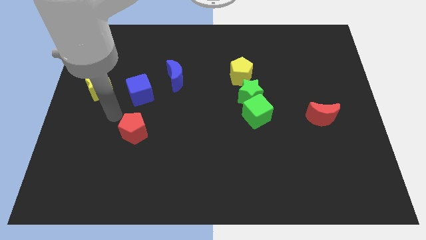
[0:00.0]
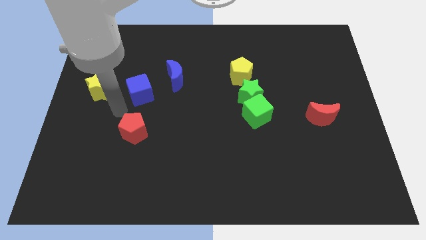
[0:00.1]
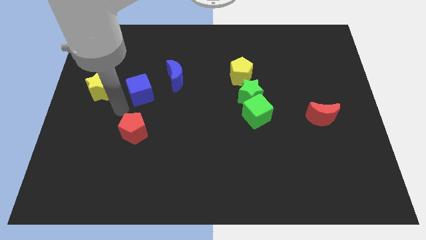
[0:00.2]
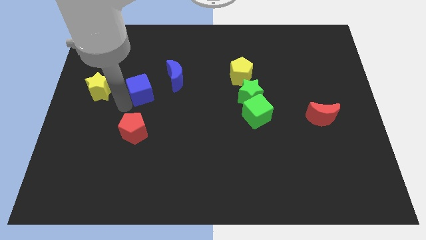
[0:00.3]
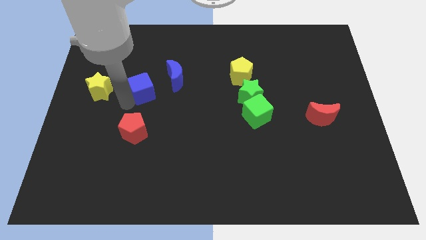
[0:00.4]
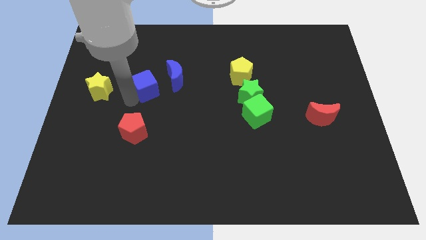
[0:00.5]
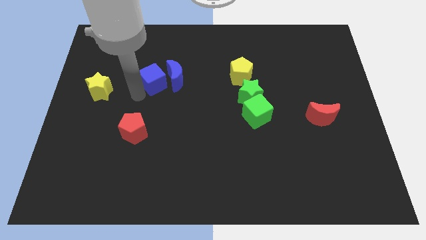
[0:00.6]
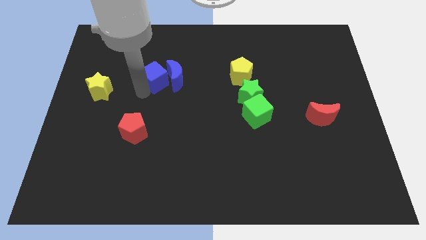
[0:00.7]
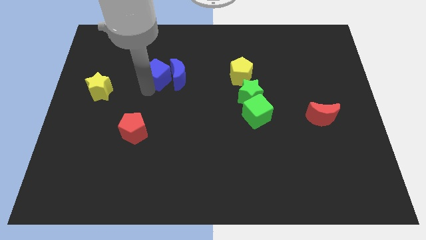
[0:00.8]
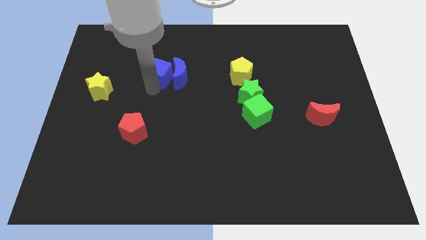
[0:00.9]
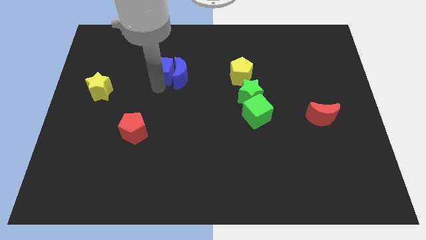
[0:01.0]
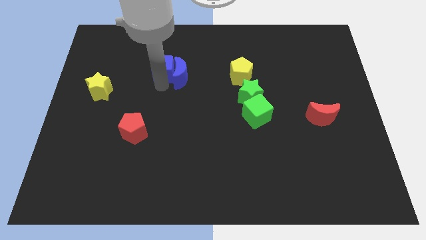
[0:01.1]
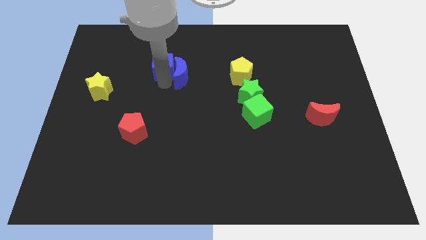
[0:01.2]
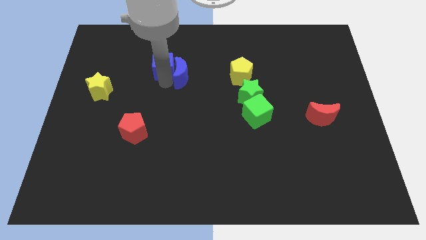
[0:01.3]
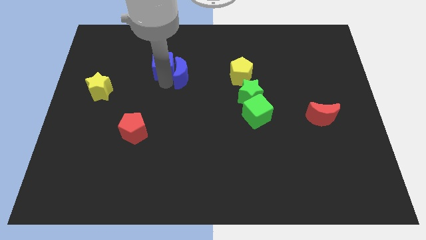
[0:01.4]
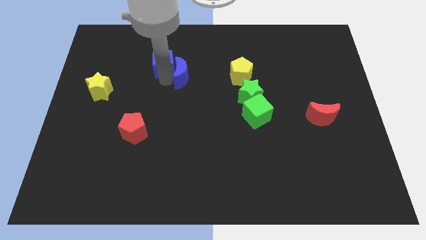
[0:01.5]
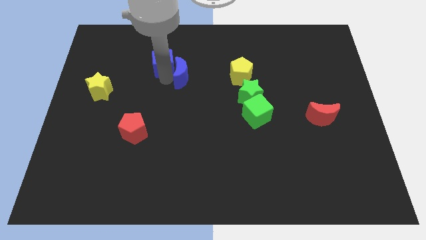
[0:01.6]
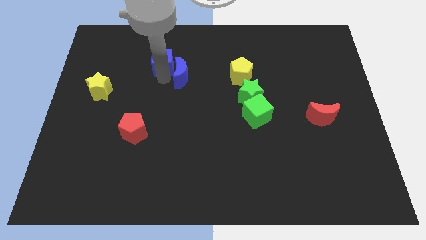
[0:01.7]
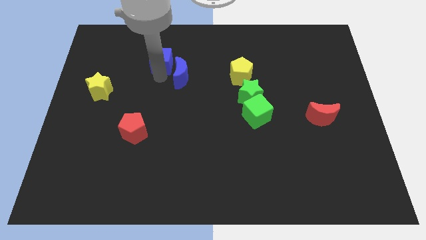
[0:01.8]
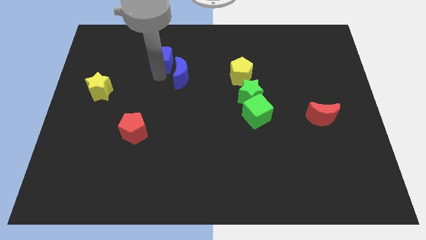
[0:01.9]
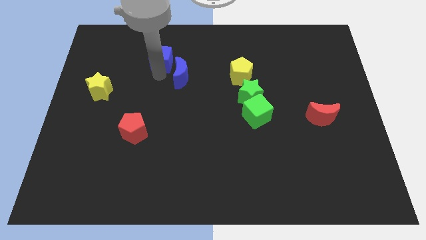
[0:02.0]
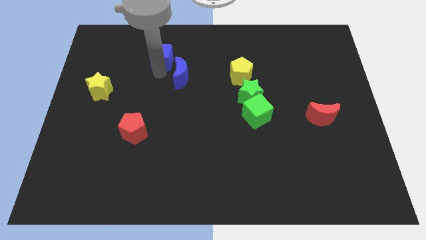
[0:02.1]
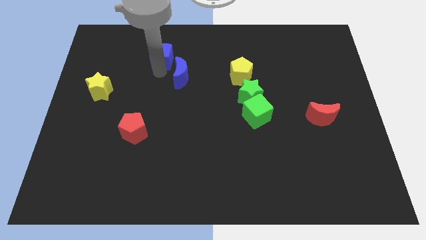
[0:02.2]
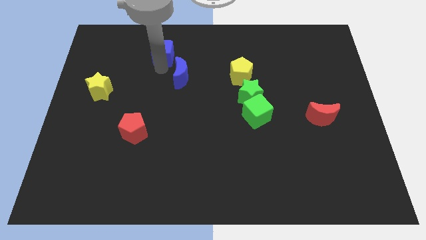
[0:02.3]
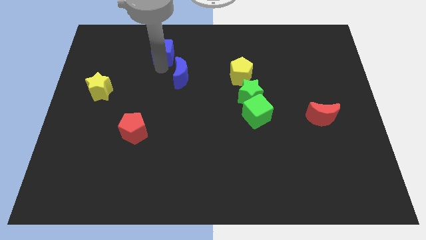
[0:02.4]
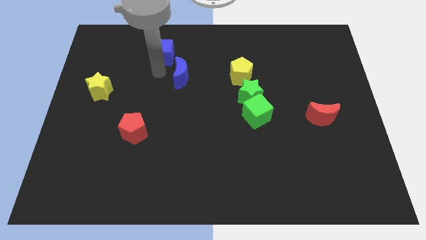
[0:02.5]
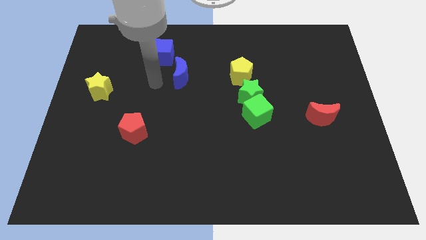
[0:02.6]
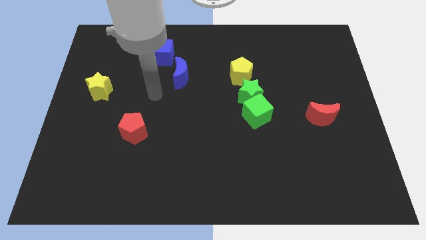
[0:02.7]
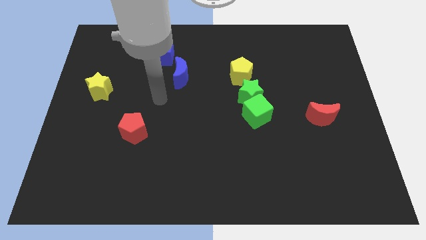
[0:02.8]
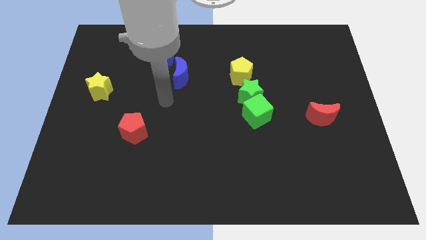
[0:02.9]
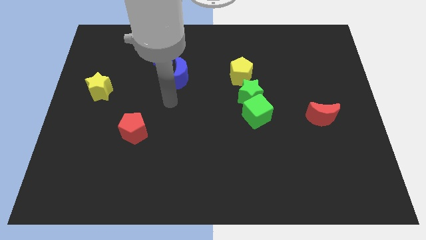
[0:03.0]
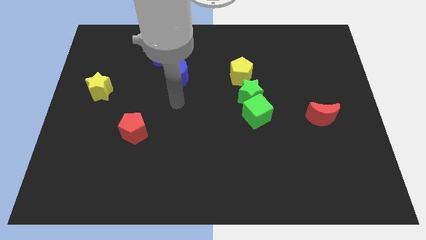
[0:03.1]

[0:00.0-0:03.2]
slightly move the blue cube to the top side of the board

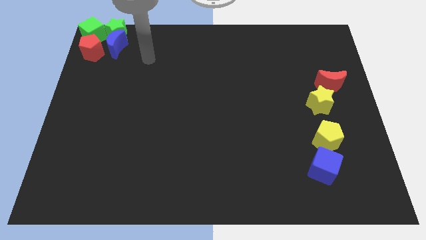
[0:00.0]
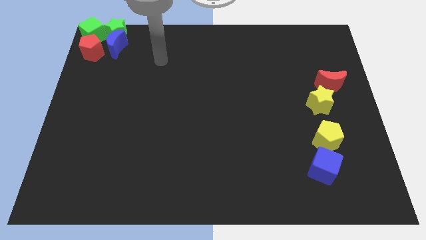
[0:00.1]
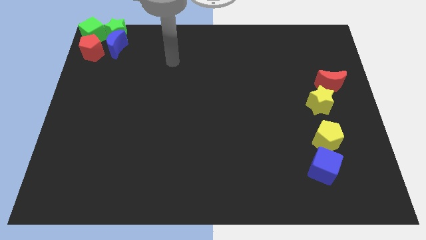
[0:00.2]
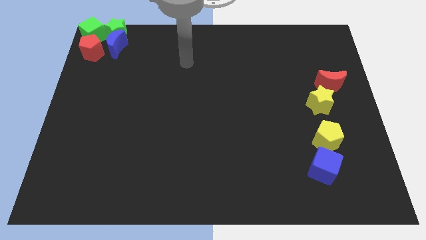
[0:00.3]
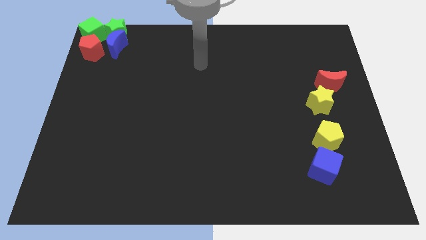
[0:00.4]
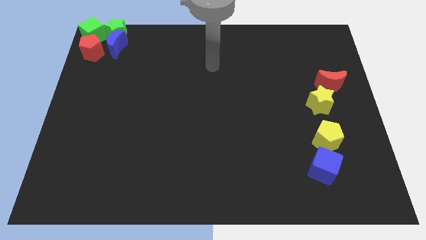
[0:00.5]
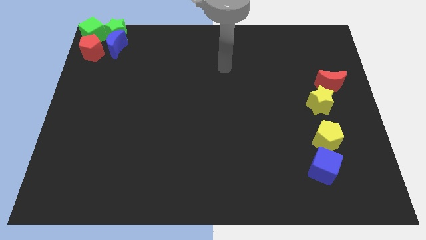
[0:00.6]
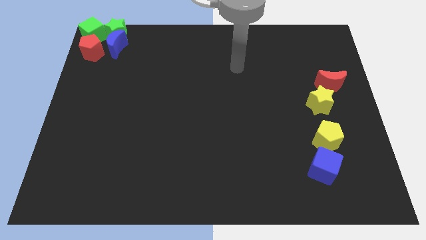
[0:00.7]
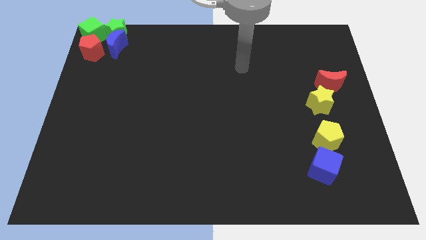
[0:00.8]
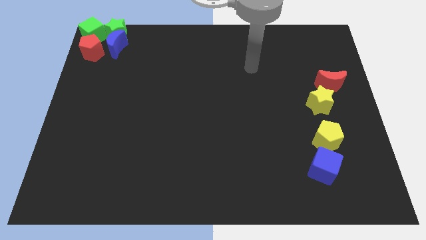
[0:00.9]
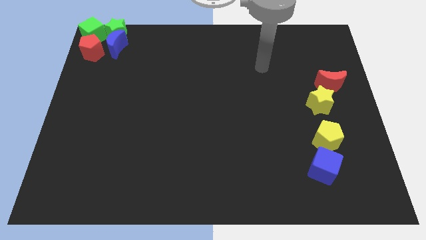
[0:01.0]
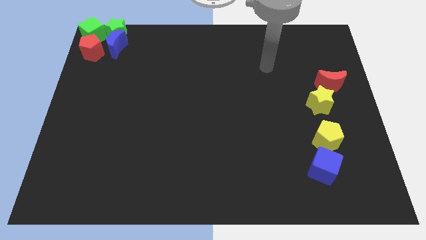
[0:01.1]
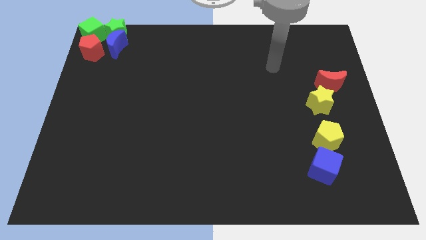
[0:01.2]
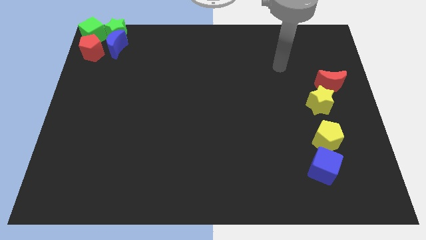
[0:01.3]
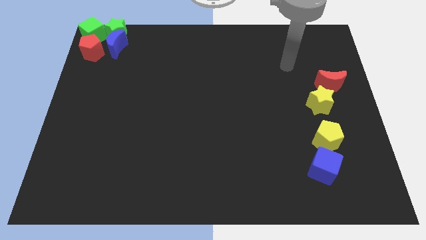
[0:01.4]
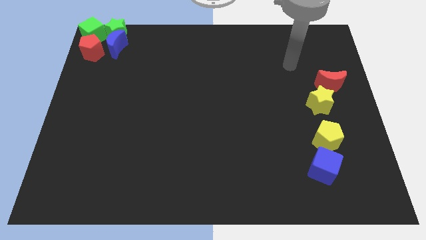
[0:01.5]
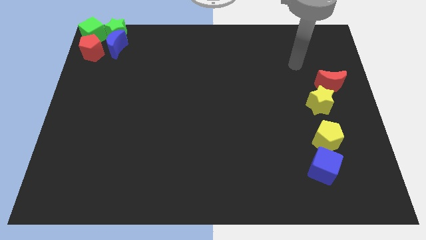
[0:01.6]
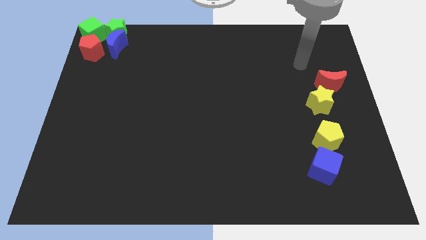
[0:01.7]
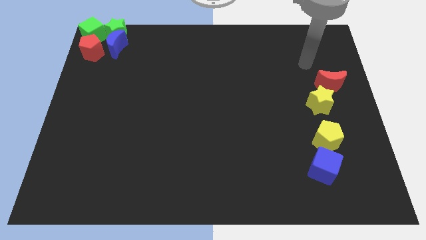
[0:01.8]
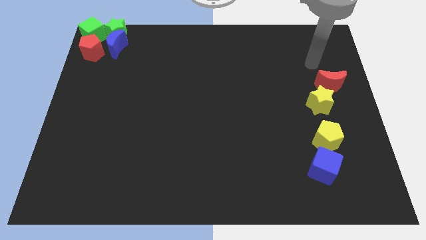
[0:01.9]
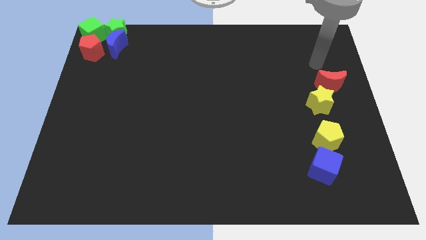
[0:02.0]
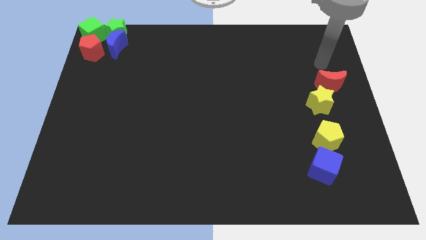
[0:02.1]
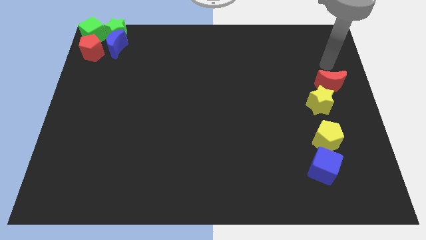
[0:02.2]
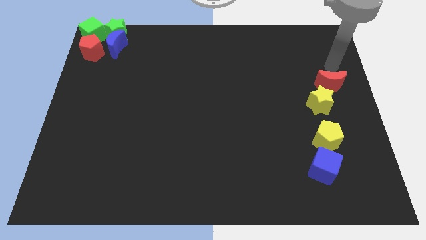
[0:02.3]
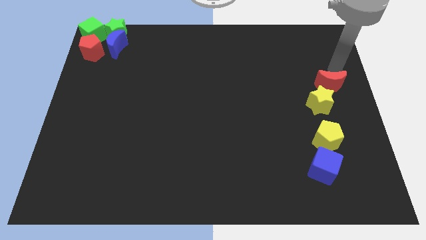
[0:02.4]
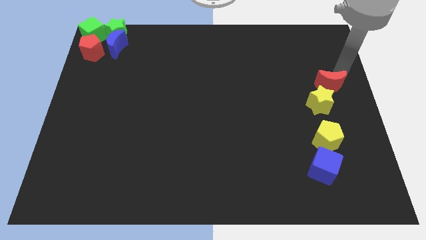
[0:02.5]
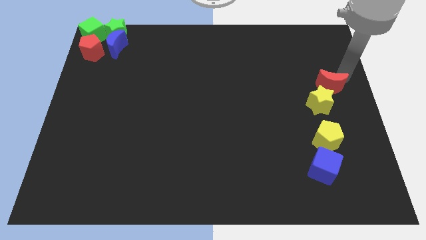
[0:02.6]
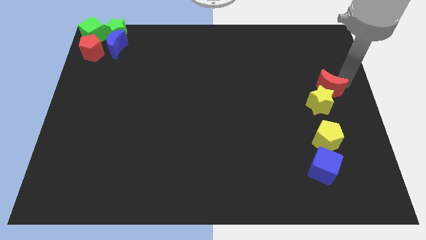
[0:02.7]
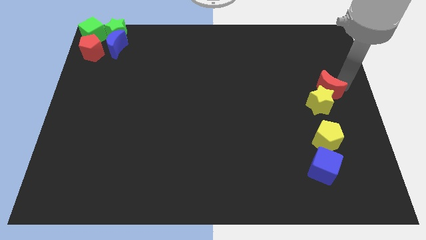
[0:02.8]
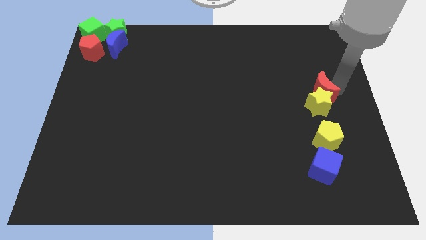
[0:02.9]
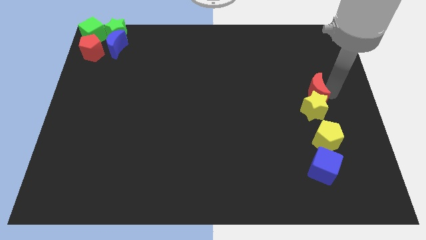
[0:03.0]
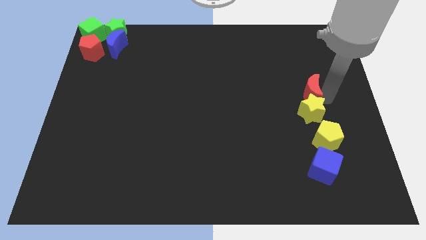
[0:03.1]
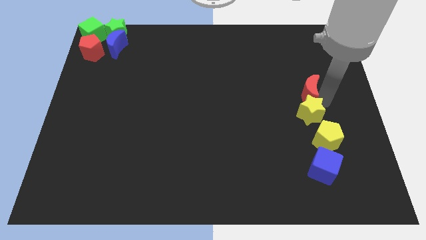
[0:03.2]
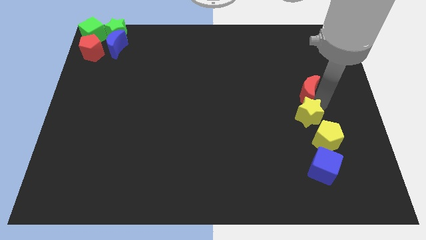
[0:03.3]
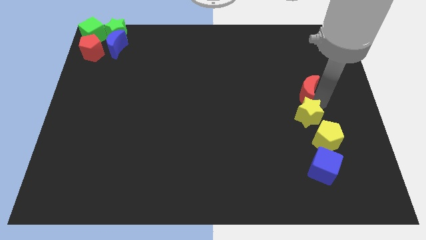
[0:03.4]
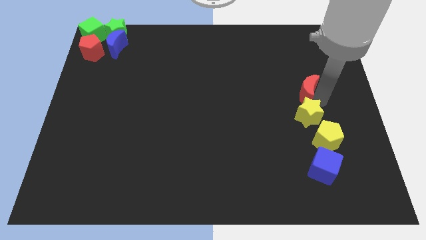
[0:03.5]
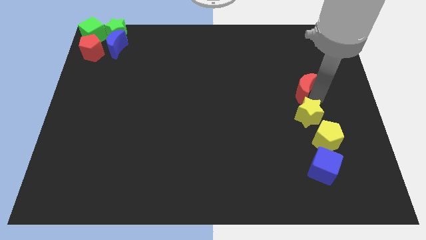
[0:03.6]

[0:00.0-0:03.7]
push the yellow star with the red crescent

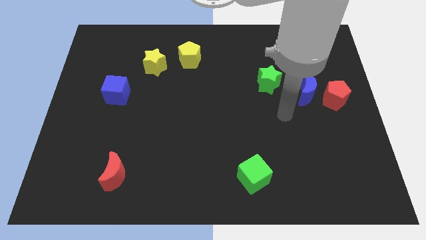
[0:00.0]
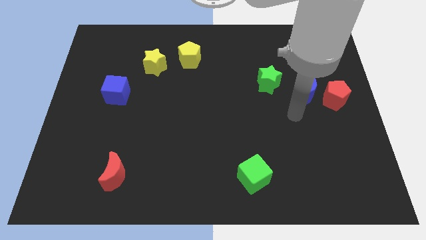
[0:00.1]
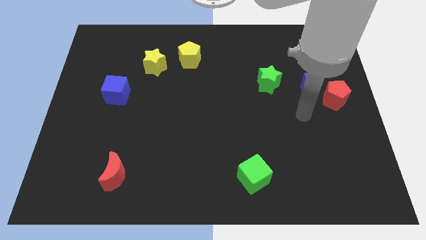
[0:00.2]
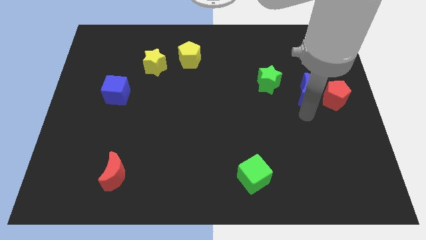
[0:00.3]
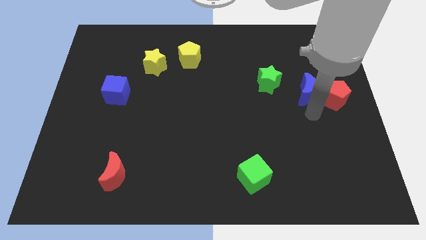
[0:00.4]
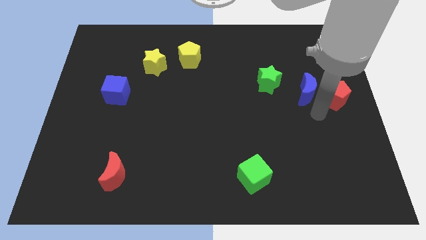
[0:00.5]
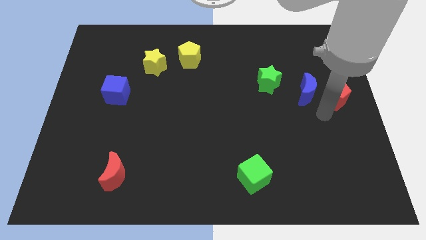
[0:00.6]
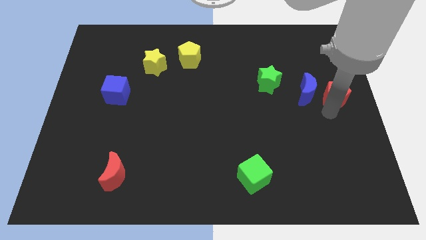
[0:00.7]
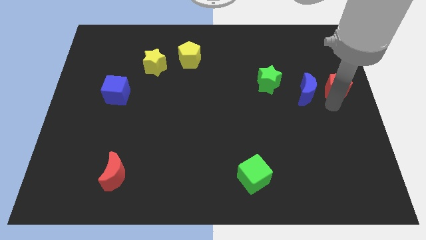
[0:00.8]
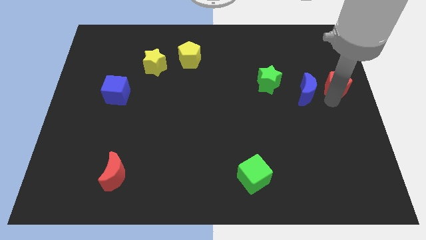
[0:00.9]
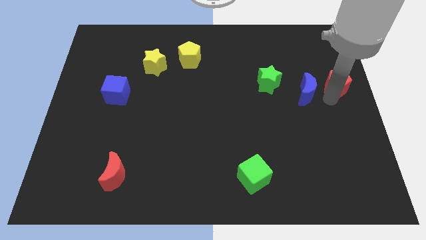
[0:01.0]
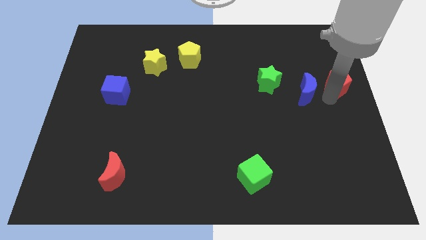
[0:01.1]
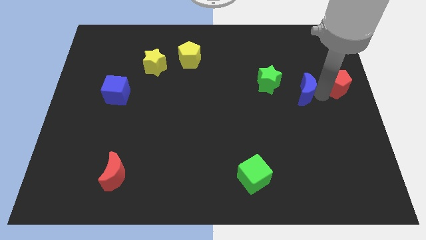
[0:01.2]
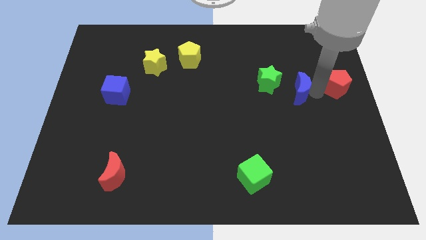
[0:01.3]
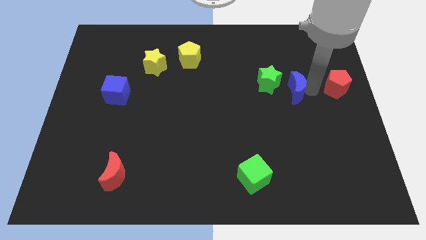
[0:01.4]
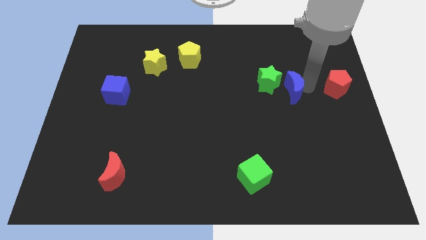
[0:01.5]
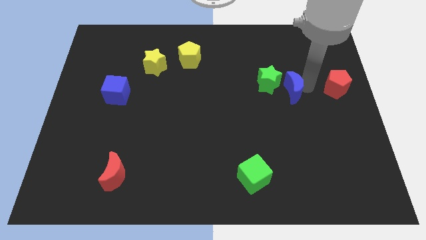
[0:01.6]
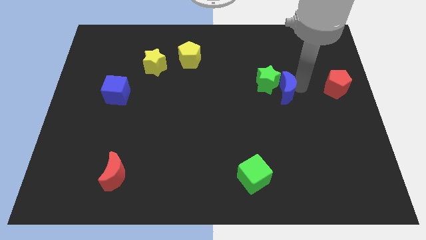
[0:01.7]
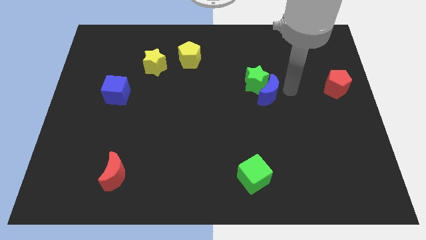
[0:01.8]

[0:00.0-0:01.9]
push the blue moon into green star

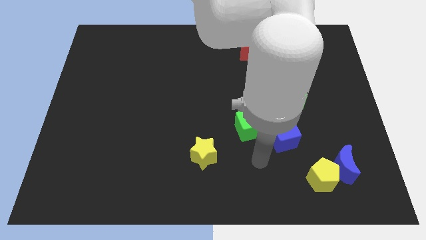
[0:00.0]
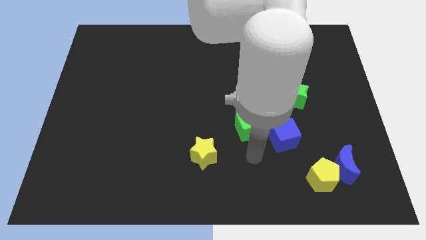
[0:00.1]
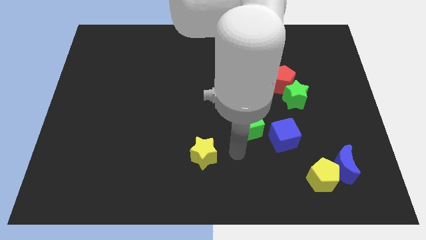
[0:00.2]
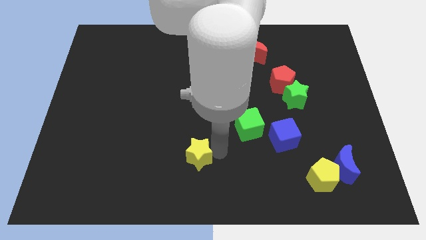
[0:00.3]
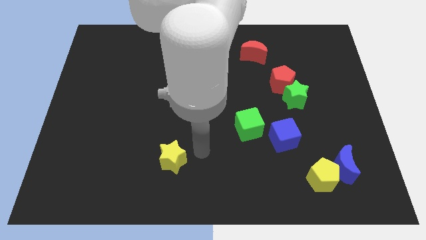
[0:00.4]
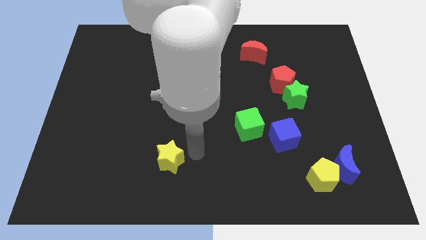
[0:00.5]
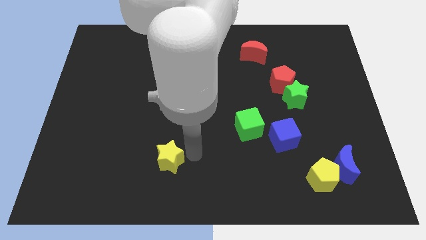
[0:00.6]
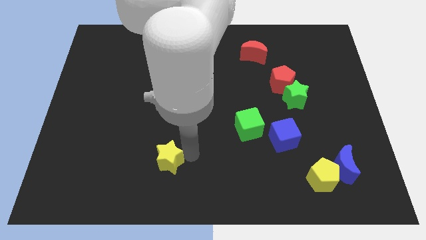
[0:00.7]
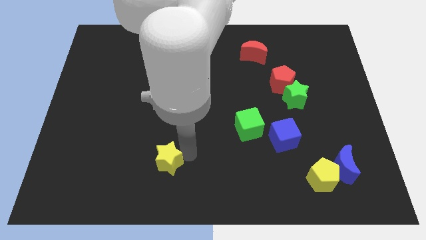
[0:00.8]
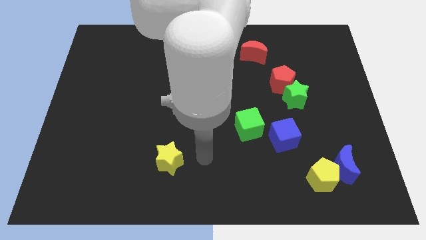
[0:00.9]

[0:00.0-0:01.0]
place the yellow star diagonally bottom left to the green cube
